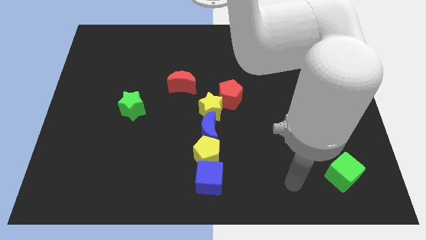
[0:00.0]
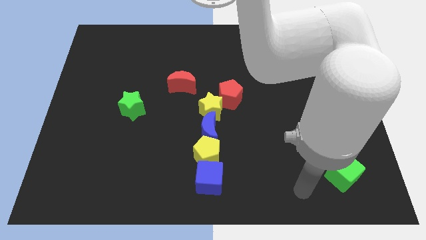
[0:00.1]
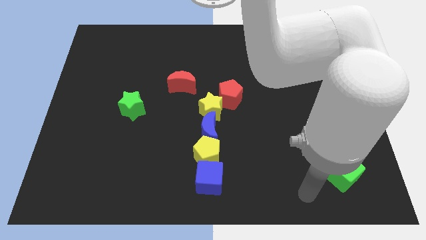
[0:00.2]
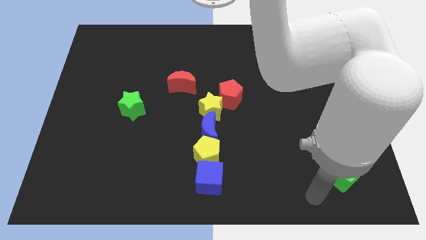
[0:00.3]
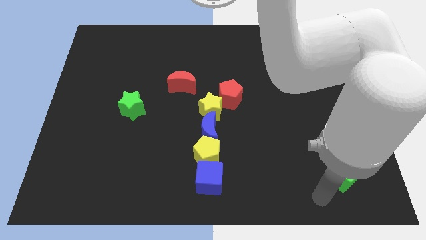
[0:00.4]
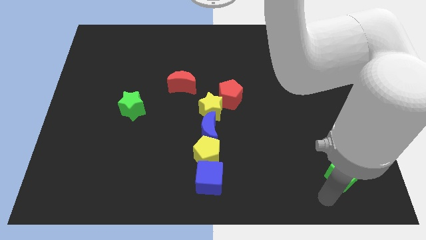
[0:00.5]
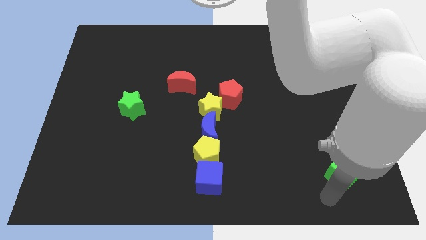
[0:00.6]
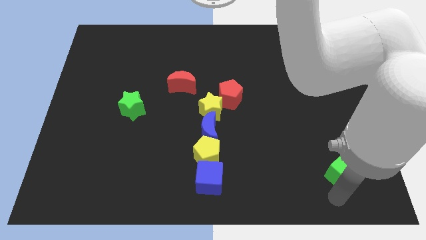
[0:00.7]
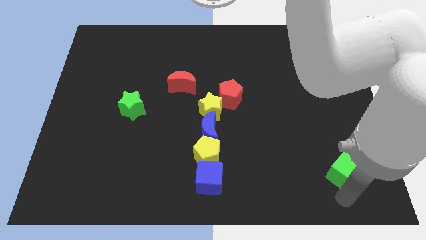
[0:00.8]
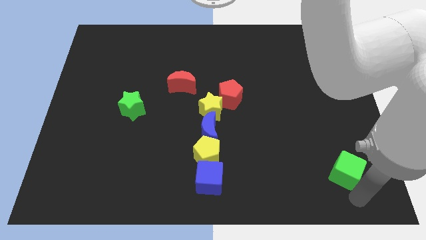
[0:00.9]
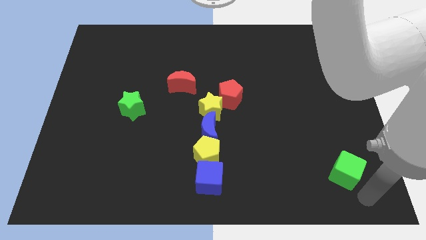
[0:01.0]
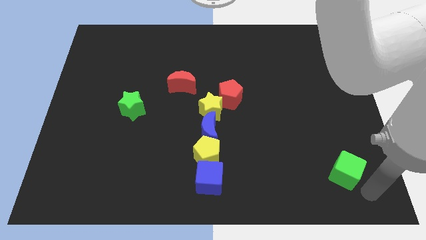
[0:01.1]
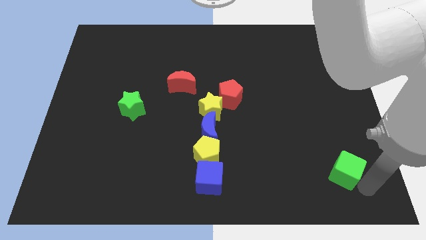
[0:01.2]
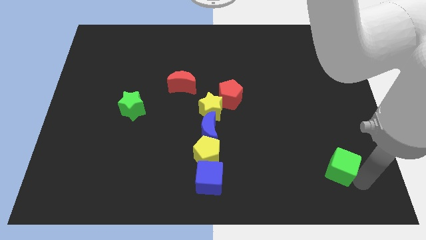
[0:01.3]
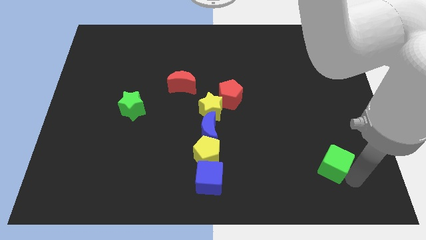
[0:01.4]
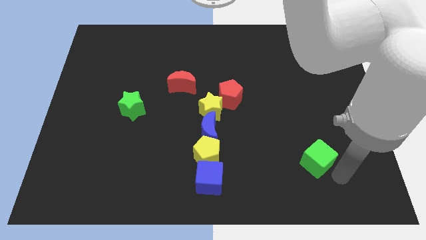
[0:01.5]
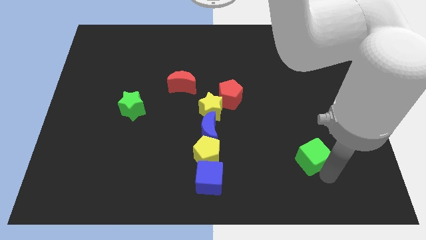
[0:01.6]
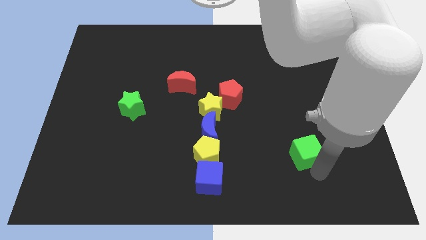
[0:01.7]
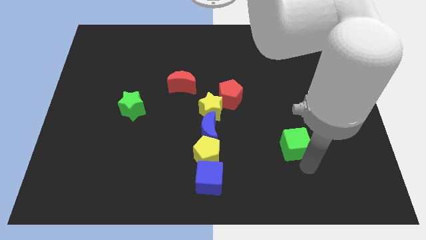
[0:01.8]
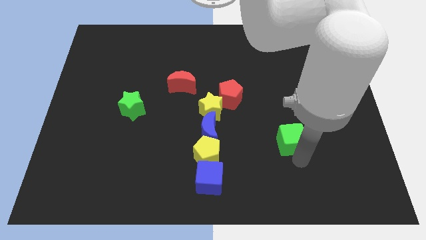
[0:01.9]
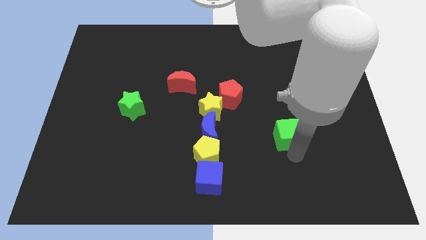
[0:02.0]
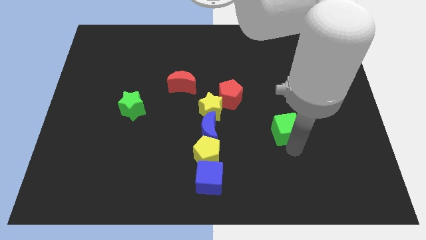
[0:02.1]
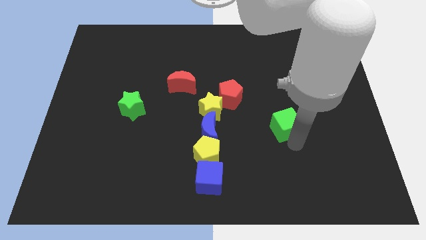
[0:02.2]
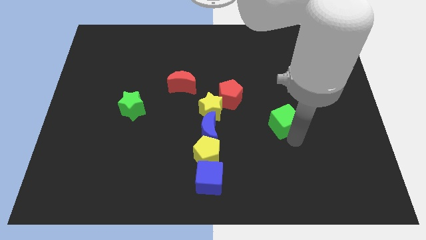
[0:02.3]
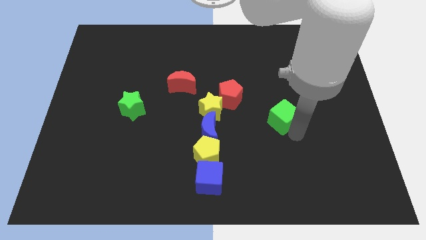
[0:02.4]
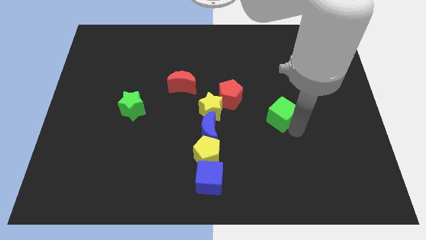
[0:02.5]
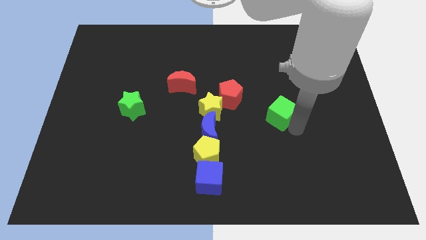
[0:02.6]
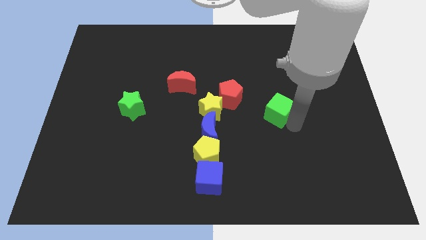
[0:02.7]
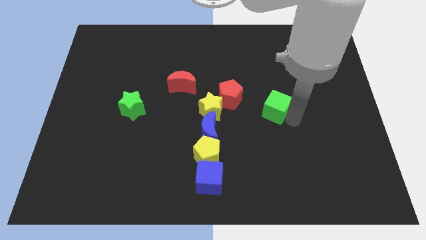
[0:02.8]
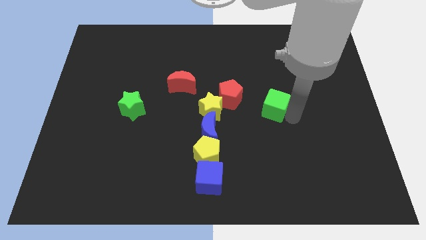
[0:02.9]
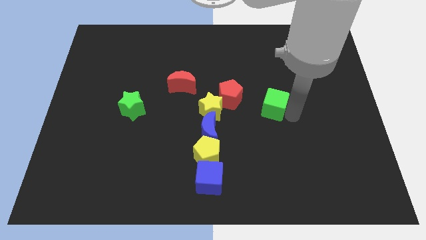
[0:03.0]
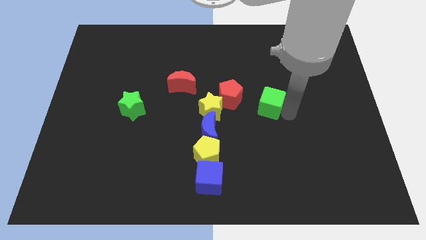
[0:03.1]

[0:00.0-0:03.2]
slide green cube up to the right of yellow star

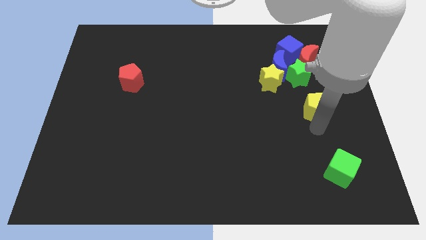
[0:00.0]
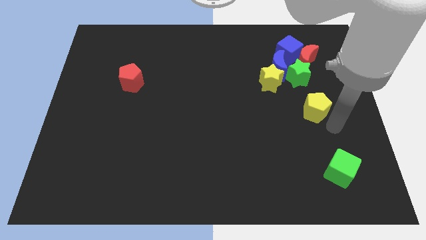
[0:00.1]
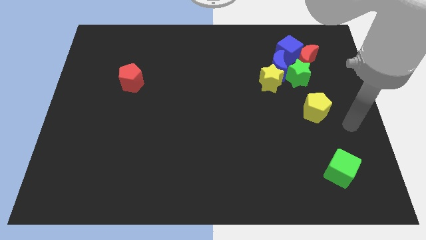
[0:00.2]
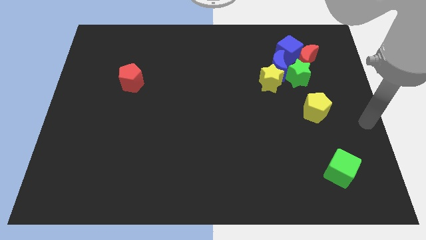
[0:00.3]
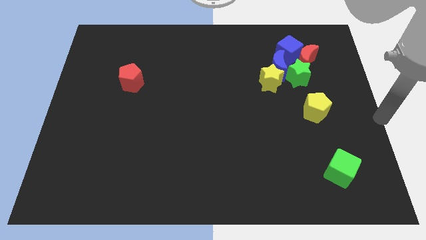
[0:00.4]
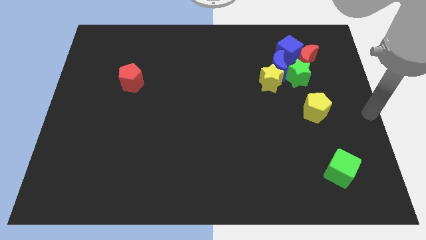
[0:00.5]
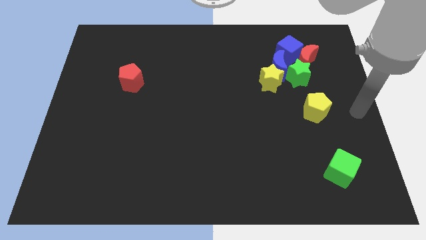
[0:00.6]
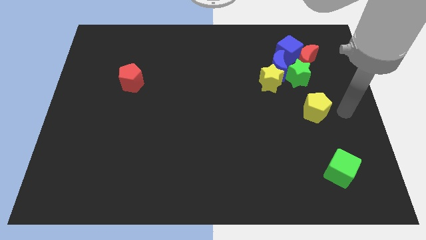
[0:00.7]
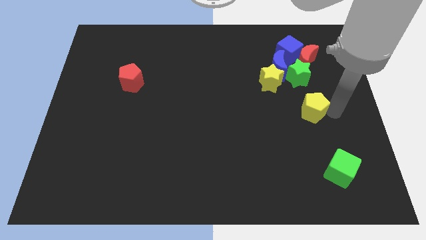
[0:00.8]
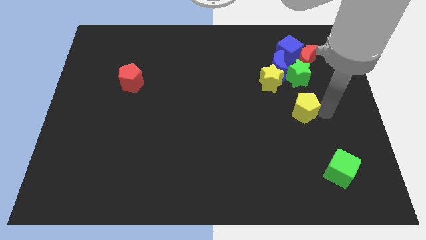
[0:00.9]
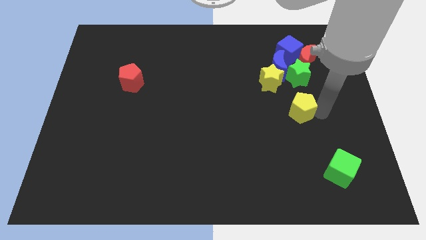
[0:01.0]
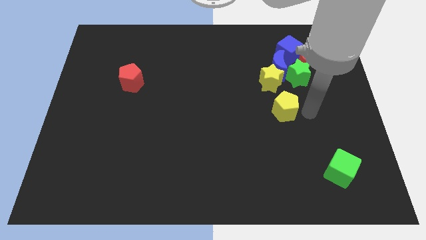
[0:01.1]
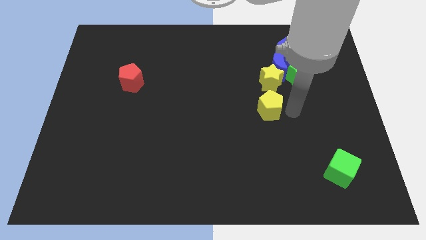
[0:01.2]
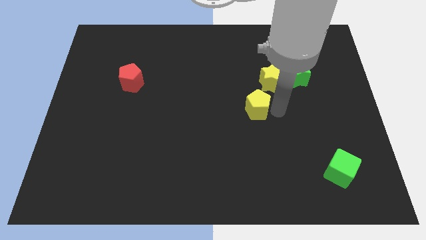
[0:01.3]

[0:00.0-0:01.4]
put the yellow pentagon to the bottom side of the yellow star

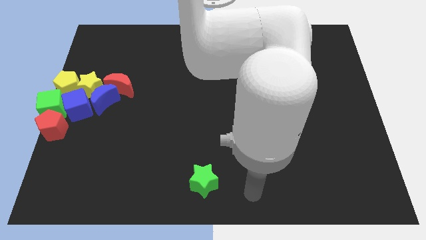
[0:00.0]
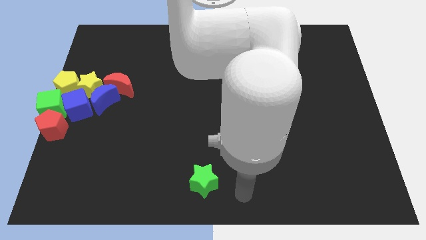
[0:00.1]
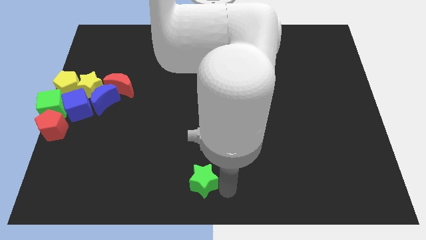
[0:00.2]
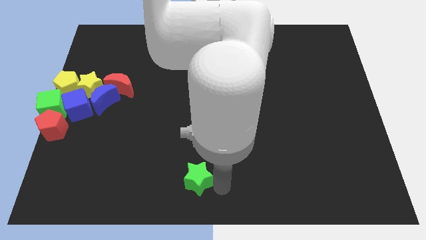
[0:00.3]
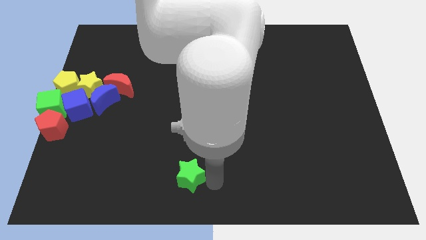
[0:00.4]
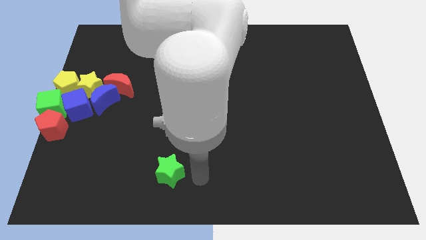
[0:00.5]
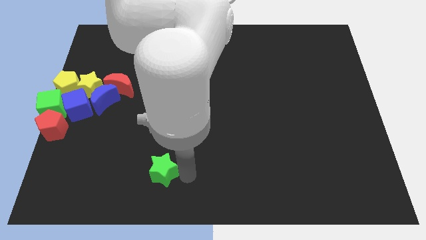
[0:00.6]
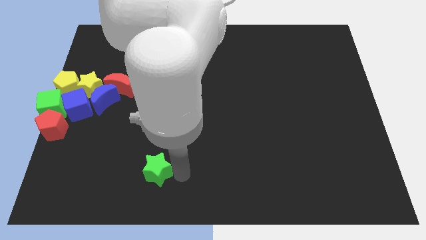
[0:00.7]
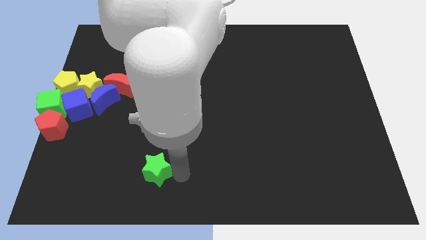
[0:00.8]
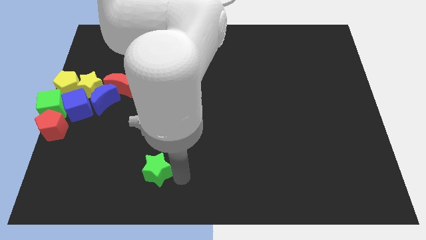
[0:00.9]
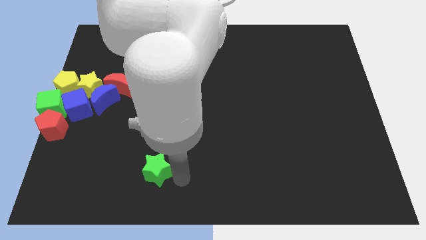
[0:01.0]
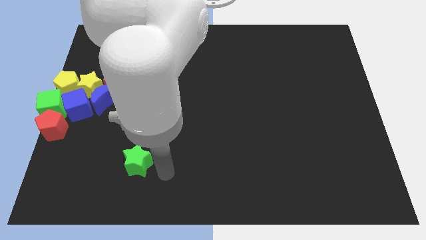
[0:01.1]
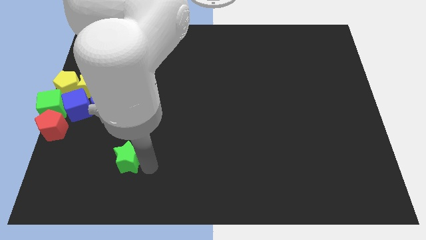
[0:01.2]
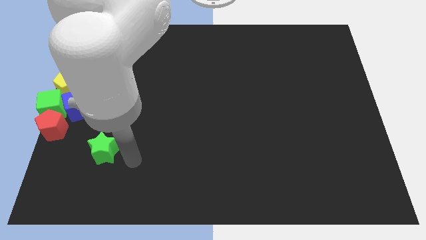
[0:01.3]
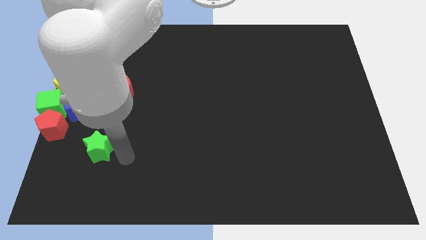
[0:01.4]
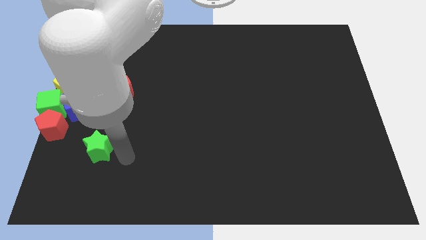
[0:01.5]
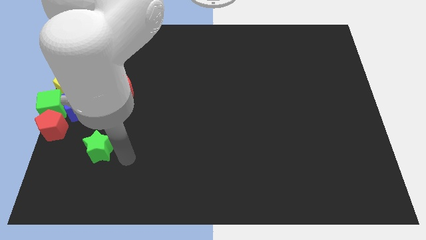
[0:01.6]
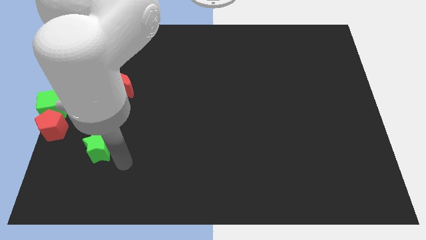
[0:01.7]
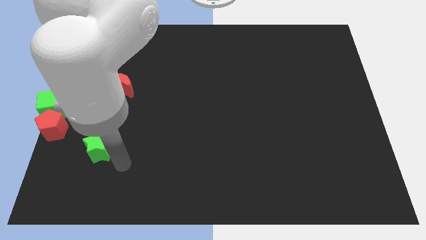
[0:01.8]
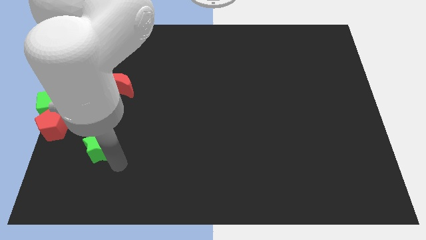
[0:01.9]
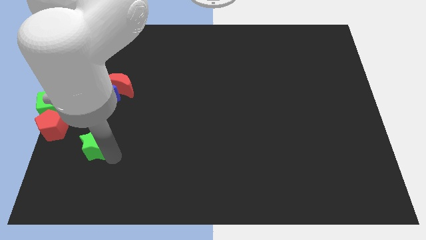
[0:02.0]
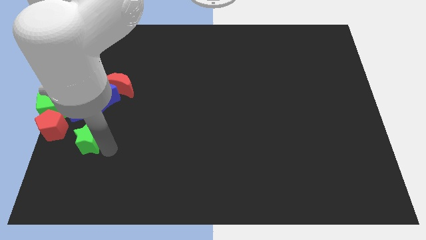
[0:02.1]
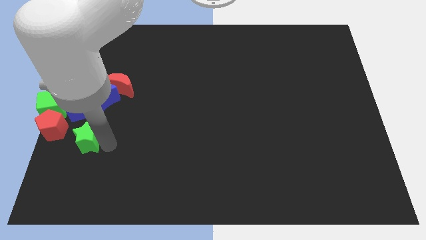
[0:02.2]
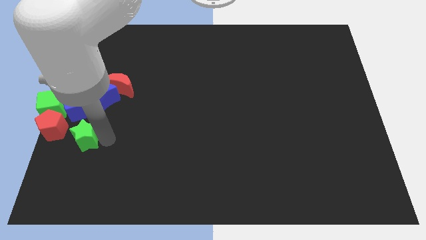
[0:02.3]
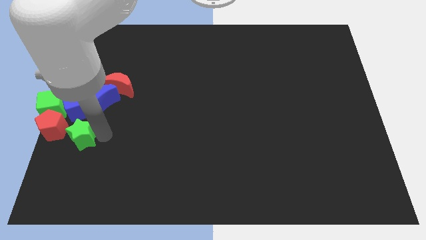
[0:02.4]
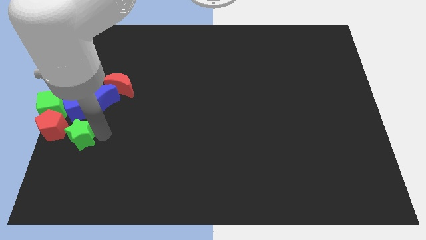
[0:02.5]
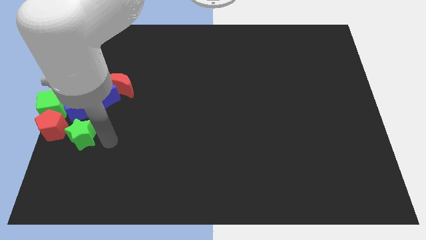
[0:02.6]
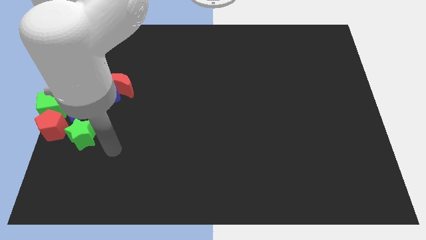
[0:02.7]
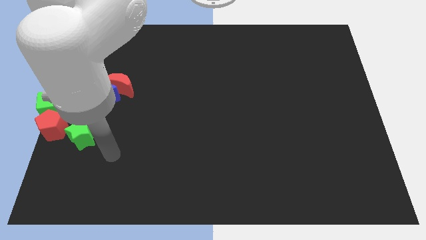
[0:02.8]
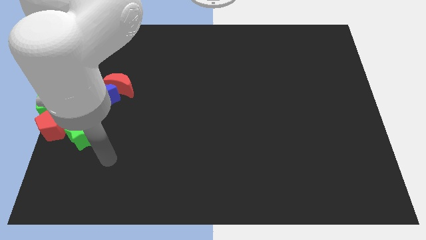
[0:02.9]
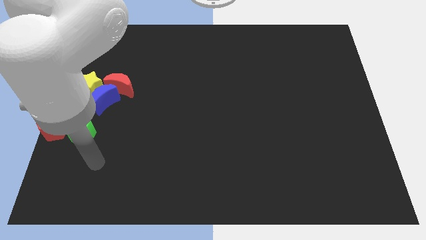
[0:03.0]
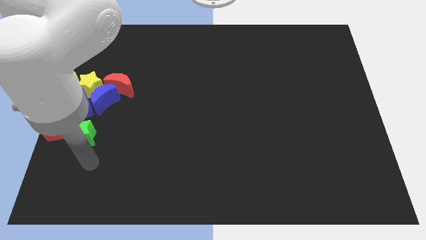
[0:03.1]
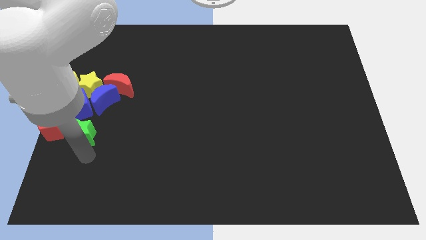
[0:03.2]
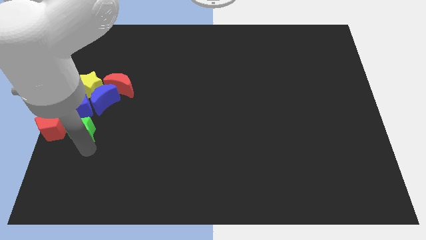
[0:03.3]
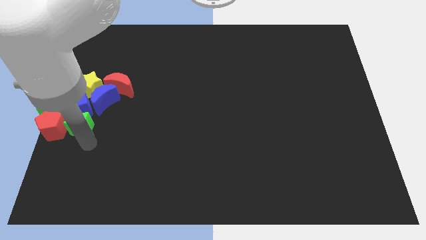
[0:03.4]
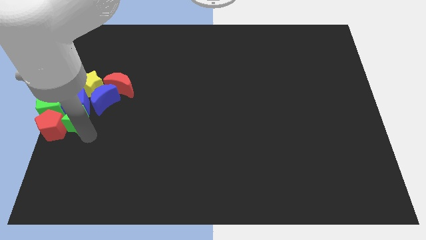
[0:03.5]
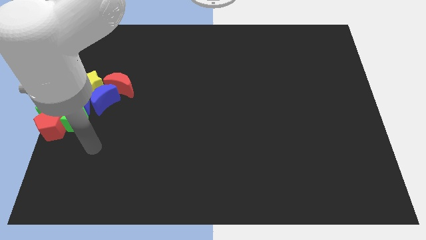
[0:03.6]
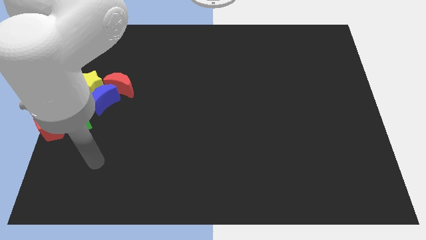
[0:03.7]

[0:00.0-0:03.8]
place the green star down to the blue cube

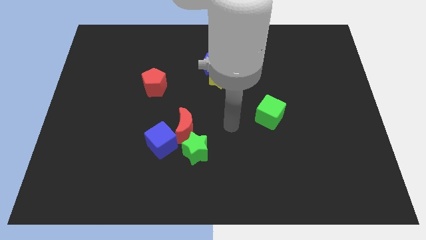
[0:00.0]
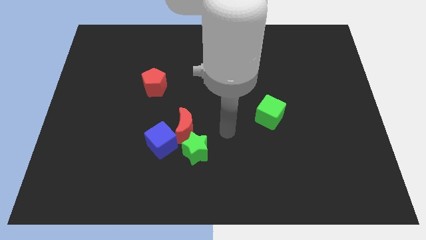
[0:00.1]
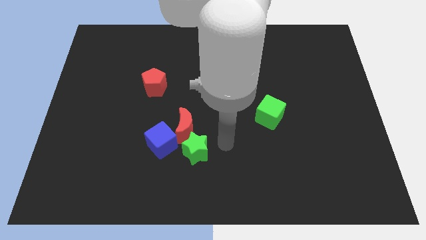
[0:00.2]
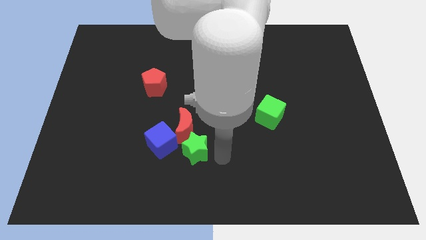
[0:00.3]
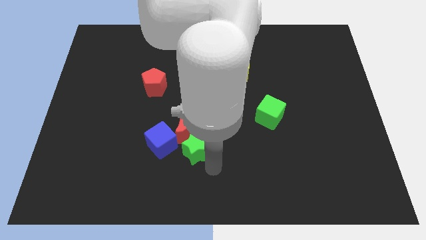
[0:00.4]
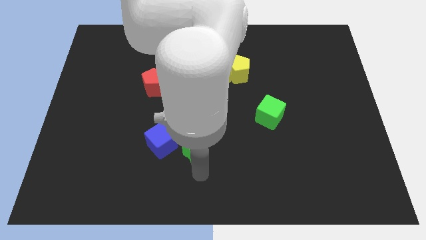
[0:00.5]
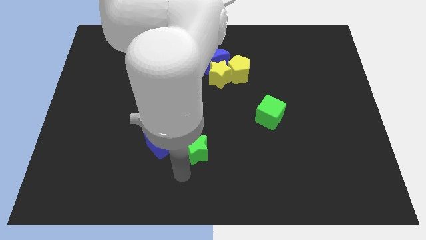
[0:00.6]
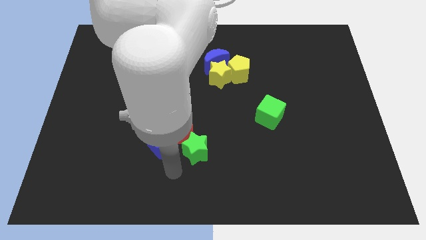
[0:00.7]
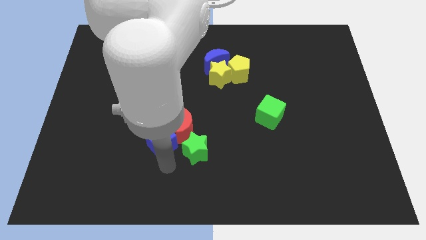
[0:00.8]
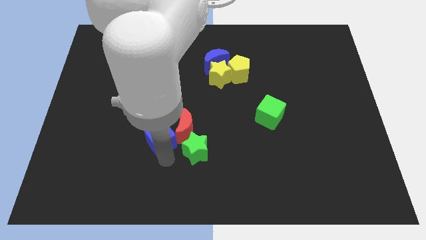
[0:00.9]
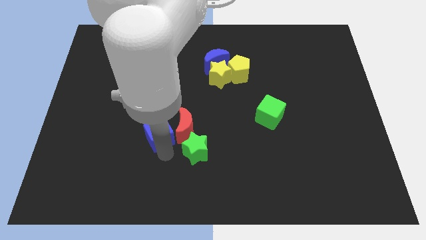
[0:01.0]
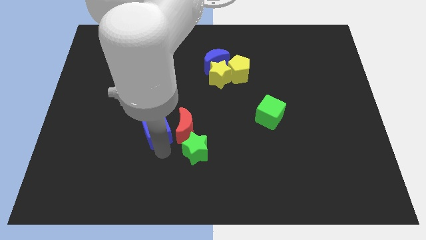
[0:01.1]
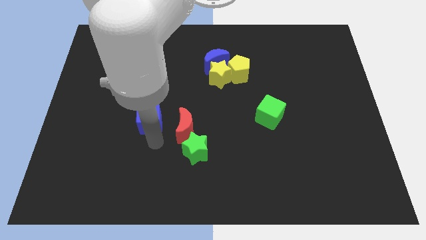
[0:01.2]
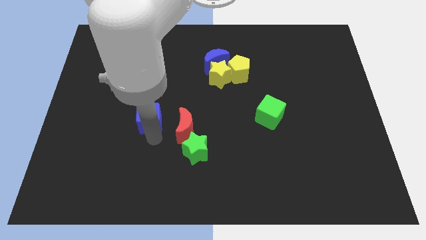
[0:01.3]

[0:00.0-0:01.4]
separate the blue cube from red crescent
